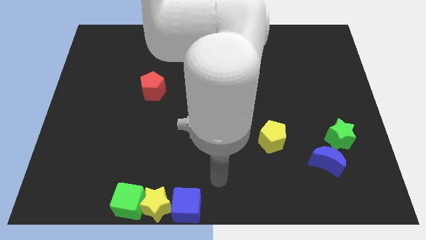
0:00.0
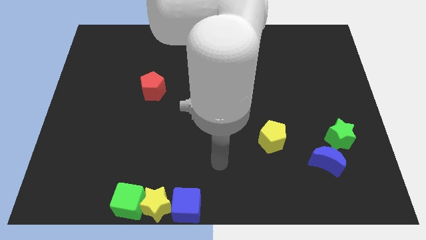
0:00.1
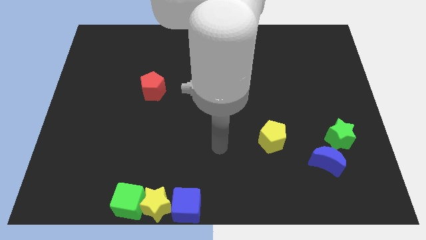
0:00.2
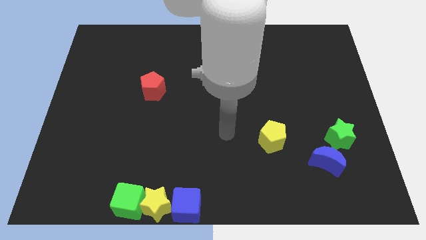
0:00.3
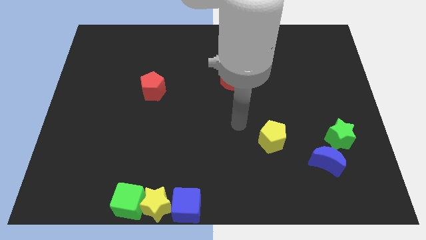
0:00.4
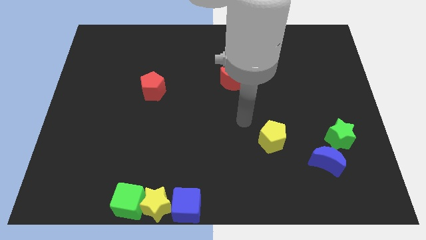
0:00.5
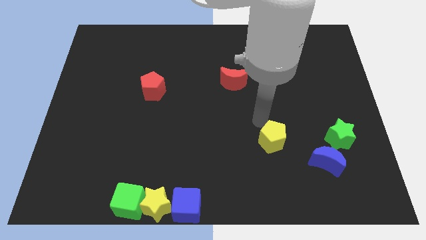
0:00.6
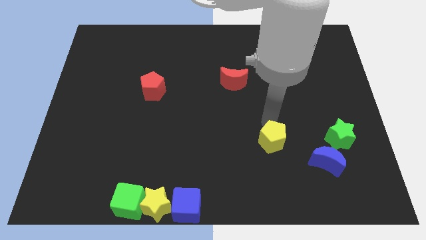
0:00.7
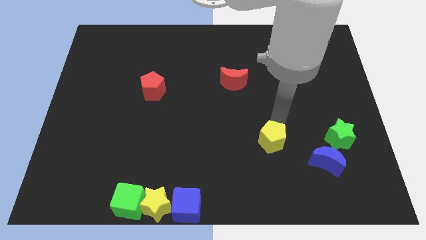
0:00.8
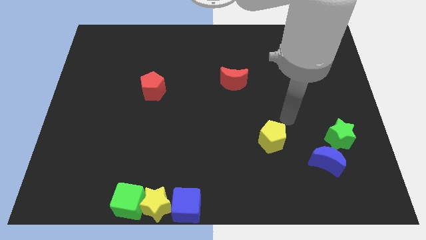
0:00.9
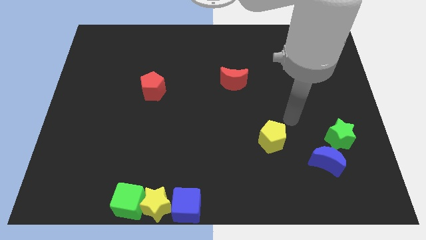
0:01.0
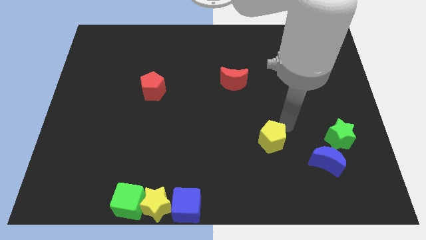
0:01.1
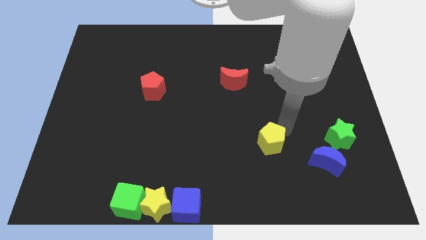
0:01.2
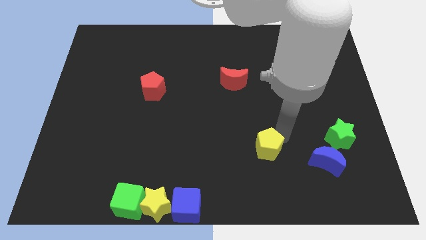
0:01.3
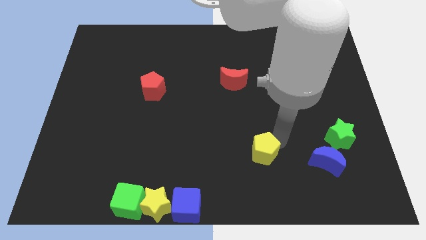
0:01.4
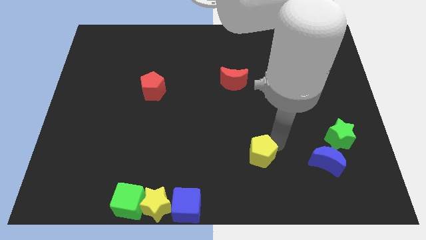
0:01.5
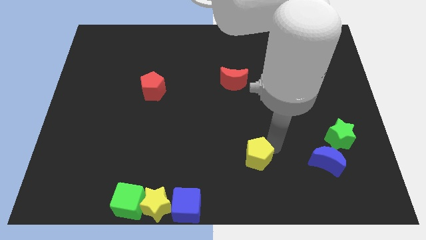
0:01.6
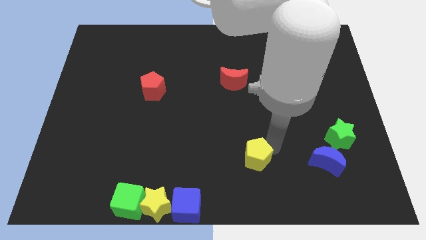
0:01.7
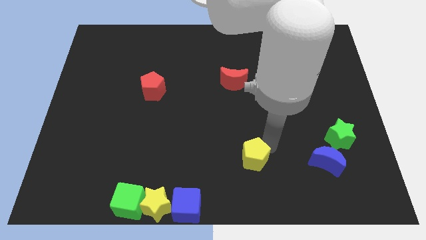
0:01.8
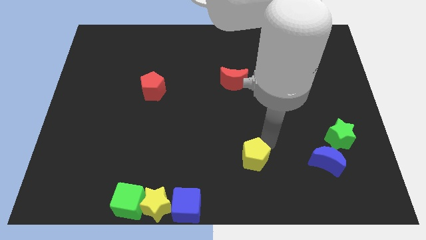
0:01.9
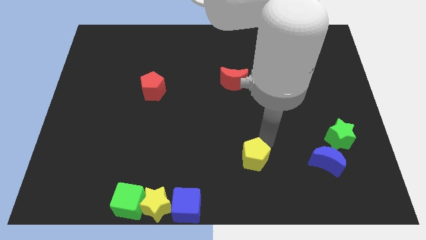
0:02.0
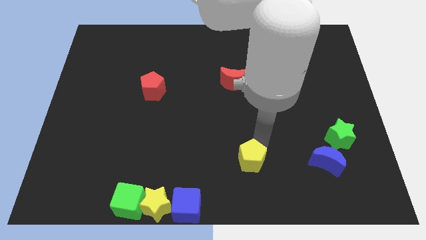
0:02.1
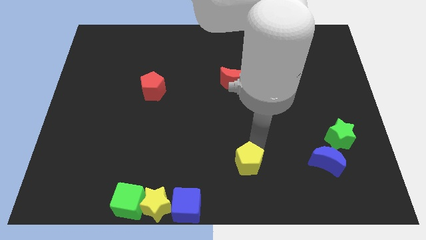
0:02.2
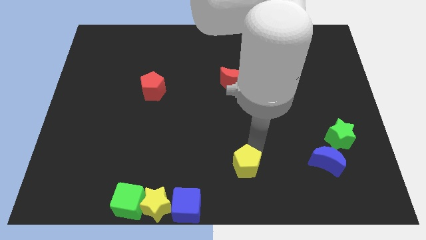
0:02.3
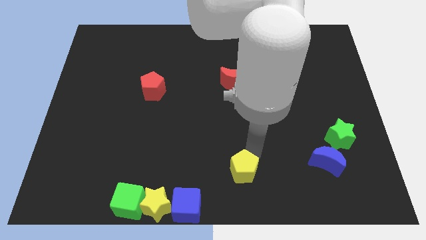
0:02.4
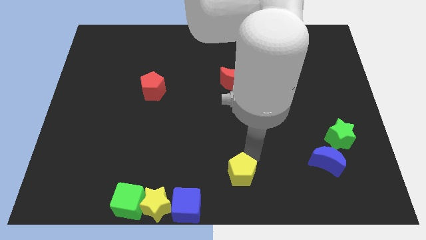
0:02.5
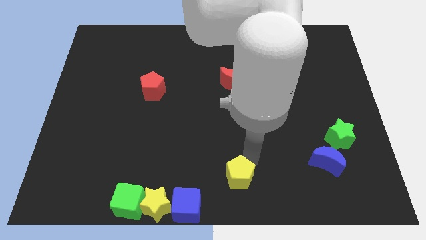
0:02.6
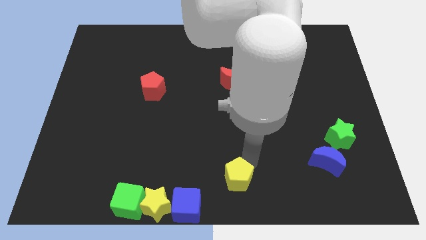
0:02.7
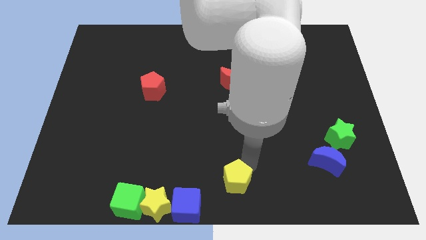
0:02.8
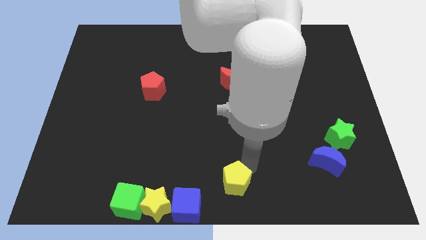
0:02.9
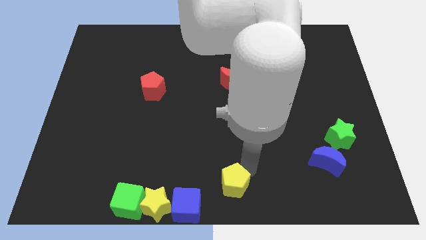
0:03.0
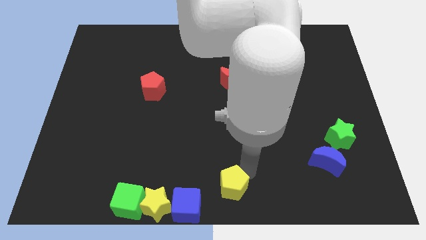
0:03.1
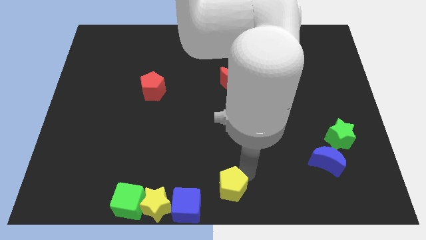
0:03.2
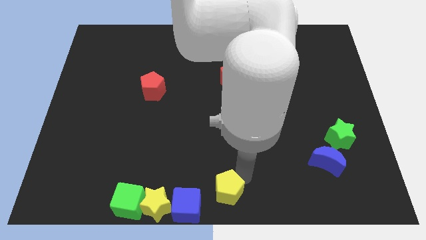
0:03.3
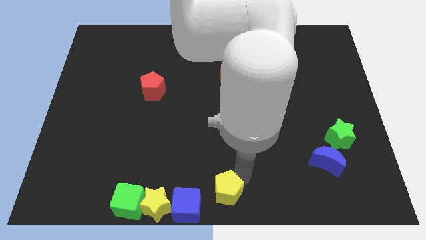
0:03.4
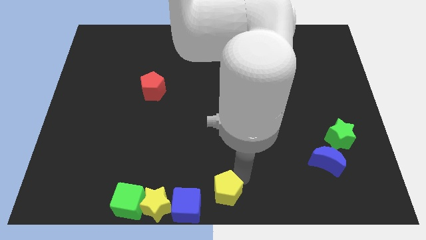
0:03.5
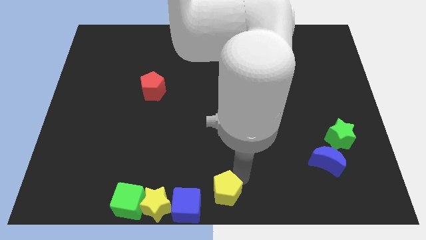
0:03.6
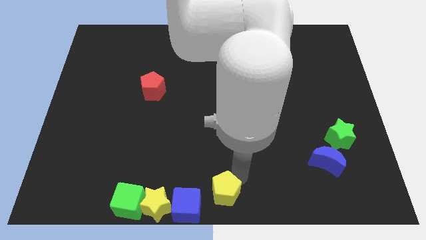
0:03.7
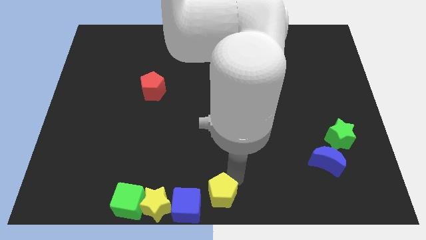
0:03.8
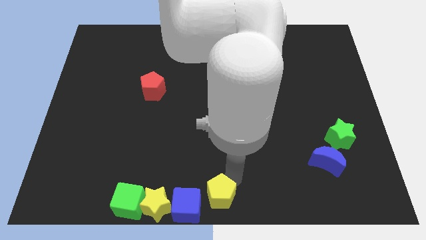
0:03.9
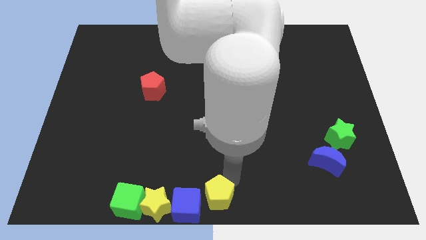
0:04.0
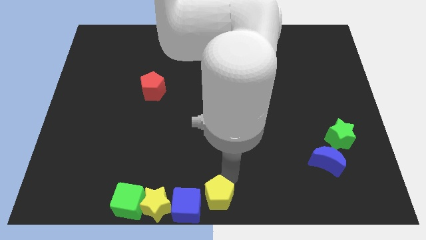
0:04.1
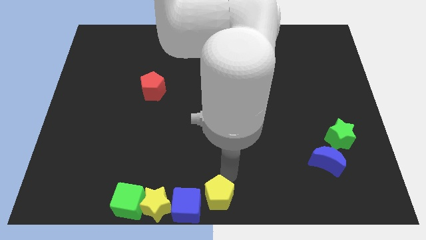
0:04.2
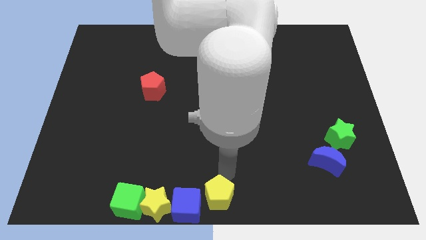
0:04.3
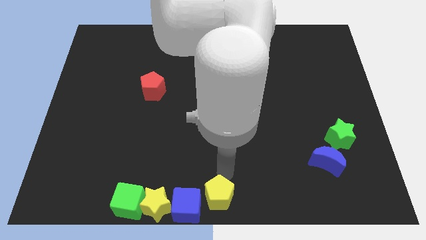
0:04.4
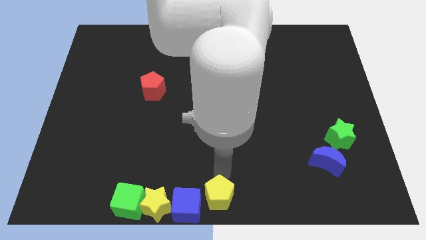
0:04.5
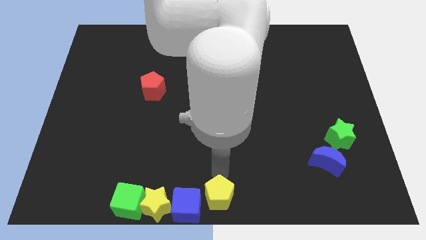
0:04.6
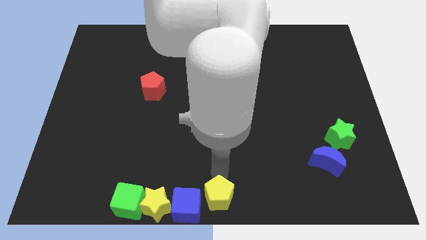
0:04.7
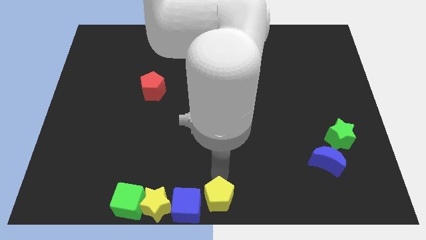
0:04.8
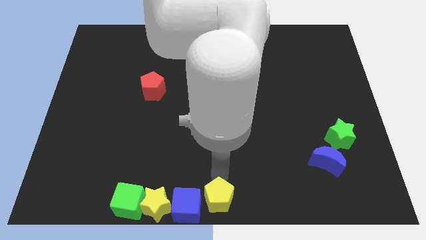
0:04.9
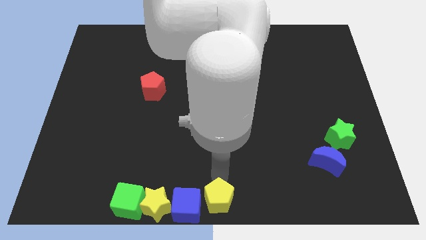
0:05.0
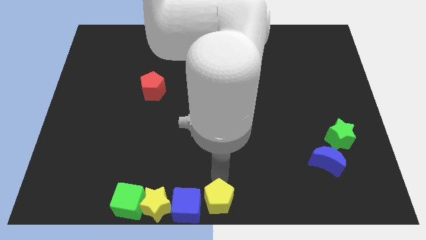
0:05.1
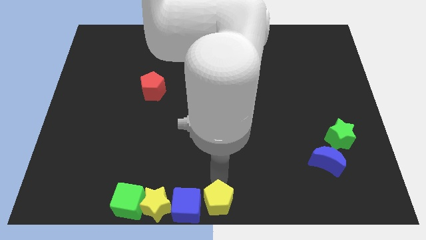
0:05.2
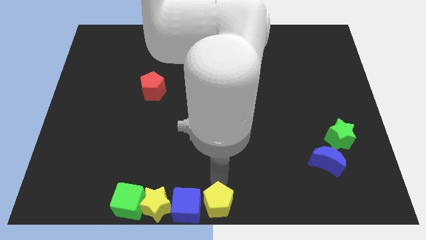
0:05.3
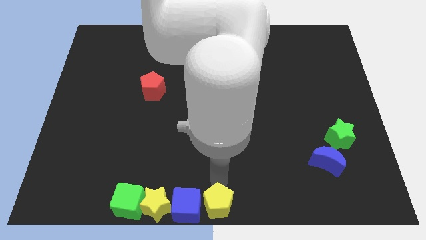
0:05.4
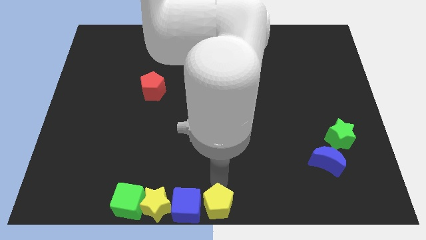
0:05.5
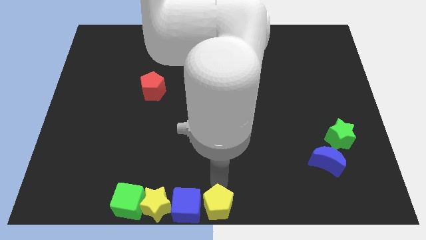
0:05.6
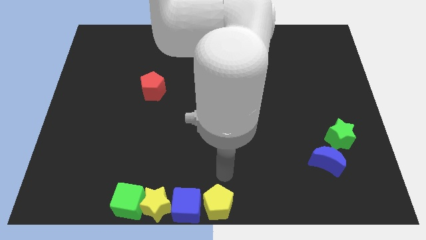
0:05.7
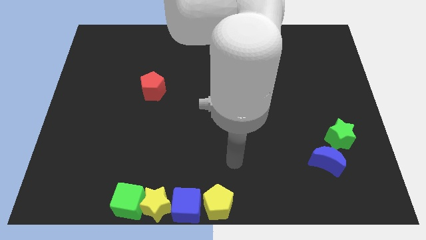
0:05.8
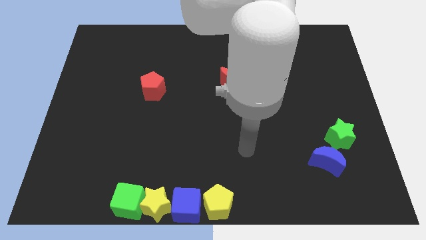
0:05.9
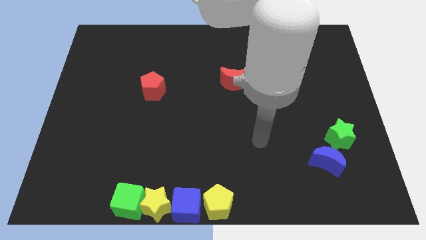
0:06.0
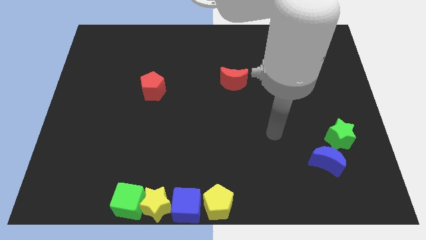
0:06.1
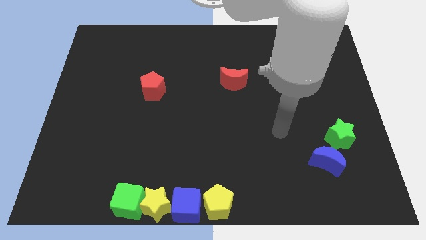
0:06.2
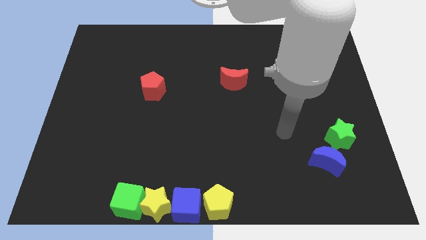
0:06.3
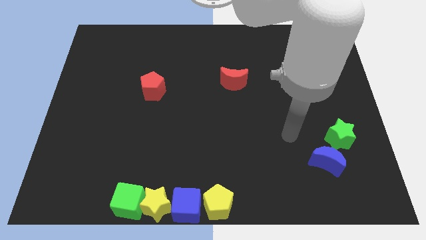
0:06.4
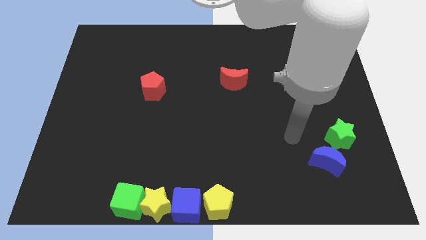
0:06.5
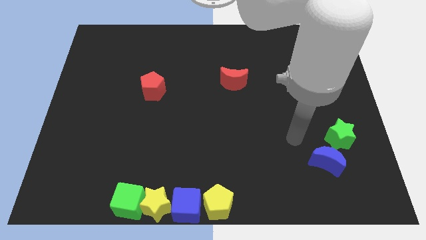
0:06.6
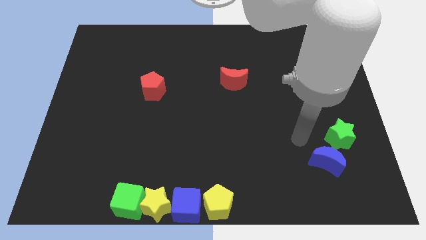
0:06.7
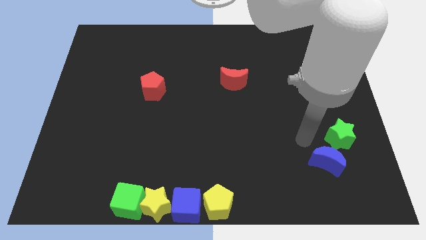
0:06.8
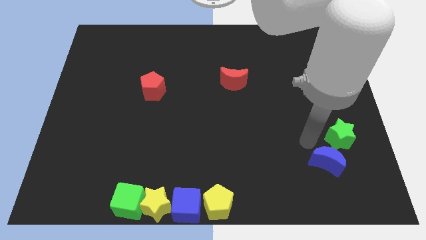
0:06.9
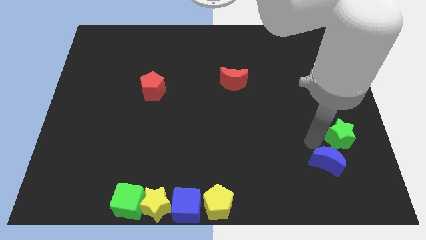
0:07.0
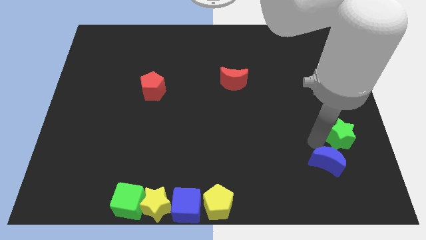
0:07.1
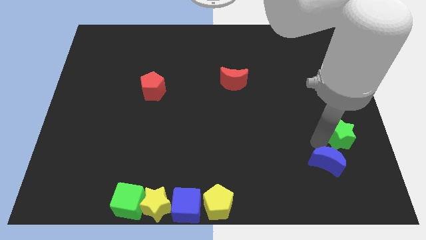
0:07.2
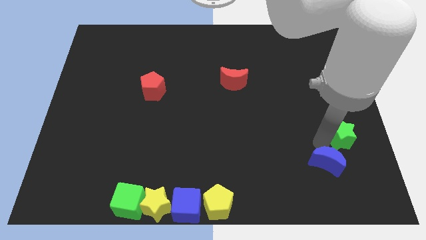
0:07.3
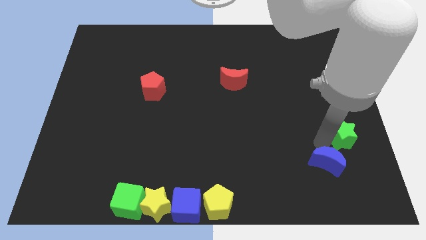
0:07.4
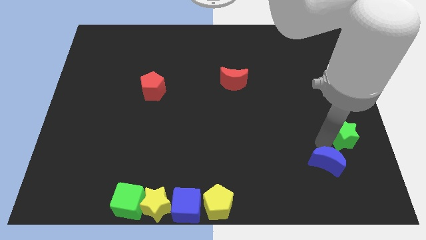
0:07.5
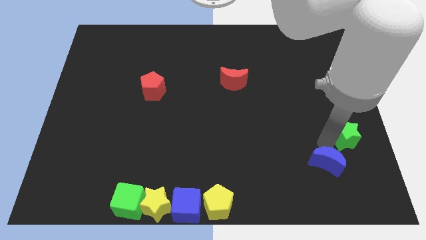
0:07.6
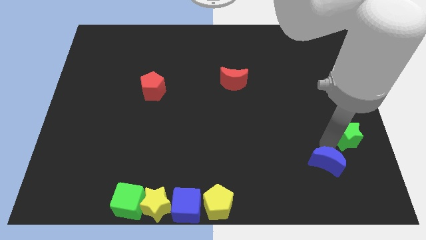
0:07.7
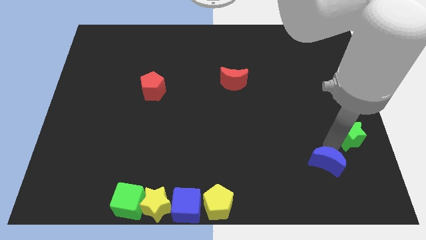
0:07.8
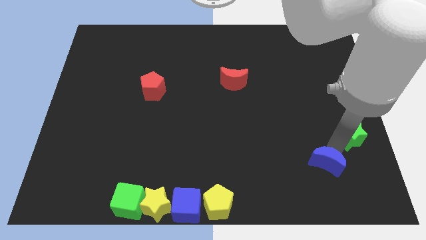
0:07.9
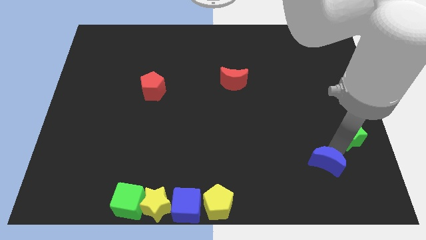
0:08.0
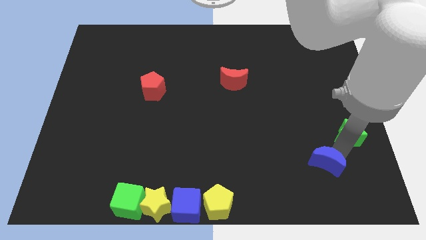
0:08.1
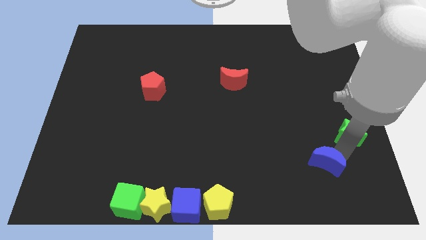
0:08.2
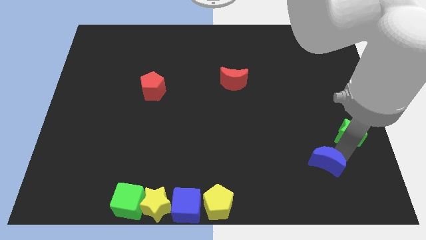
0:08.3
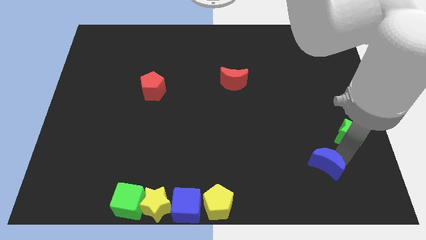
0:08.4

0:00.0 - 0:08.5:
move the yellow pentagon right beside the blue cube

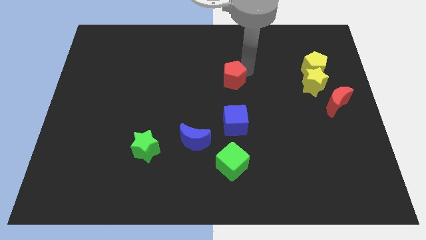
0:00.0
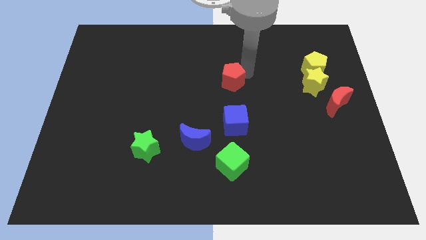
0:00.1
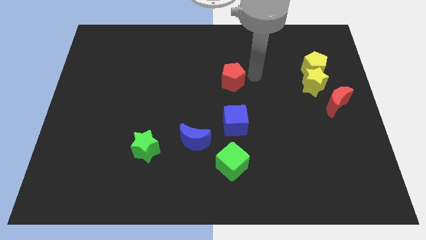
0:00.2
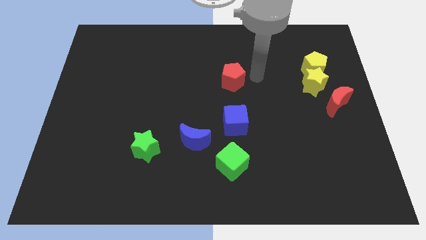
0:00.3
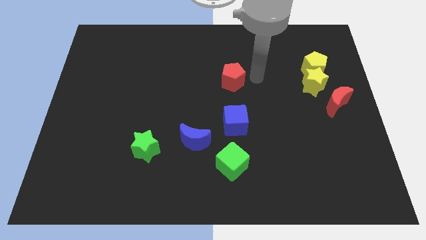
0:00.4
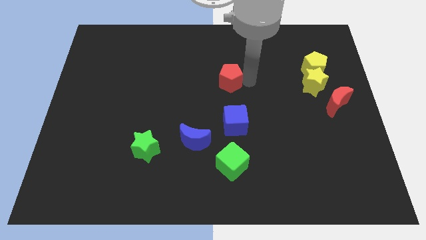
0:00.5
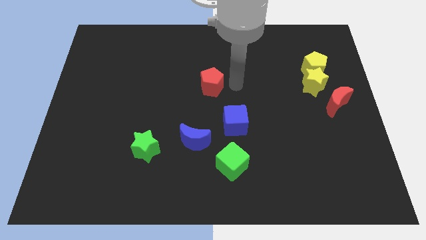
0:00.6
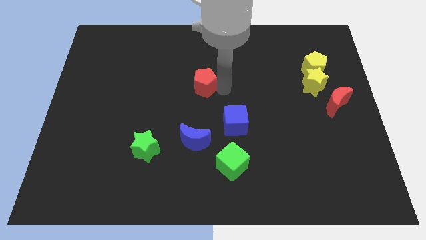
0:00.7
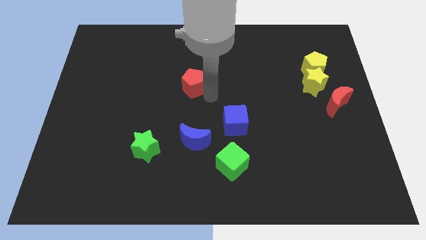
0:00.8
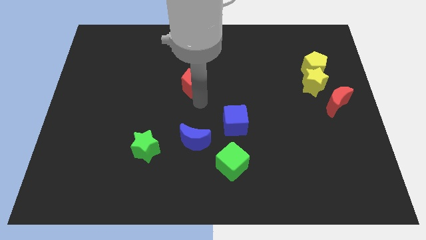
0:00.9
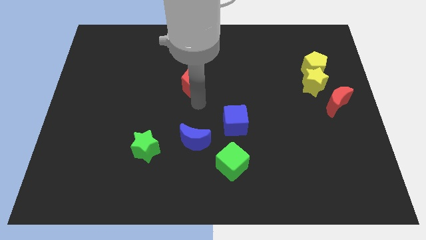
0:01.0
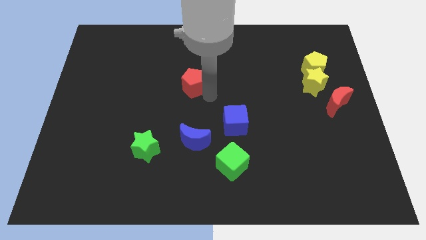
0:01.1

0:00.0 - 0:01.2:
move the red pentagon diagonally to the blue cube
